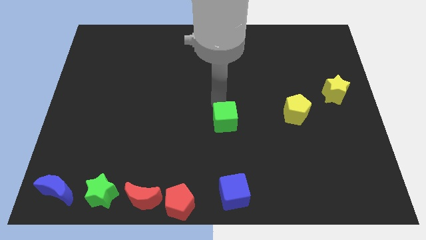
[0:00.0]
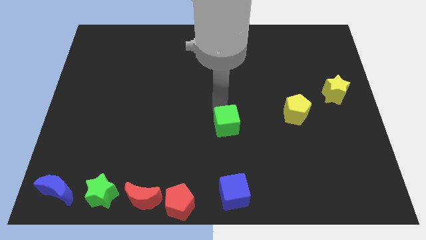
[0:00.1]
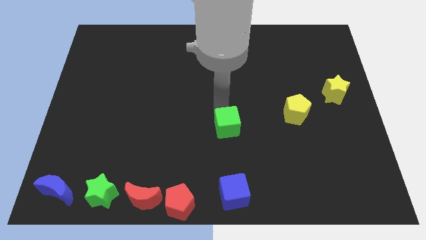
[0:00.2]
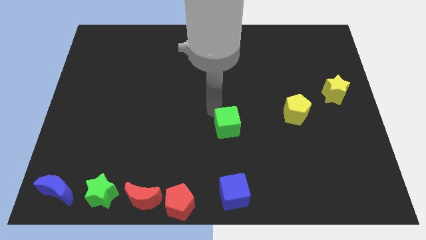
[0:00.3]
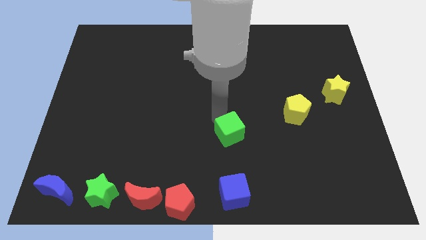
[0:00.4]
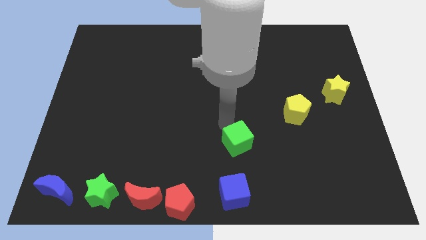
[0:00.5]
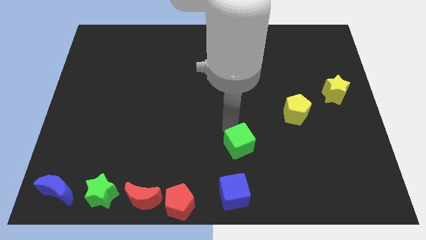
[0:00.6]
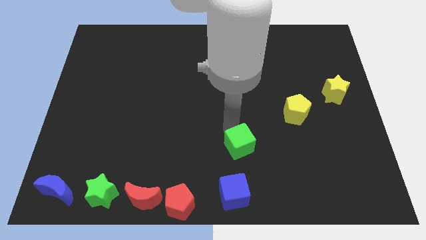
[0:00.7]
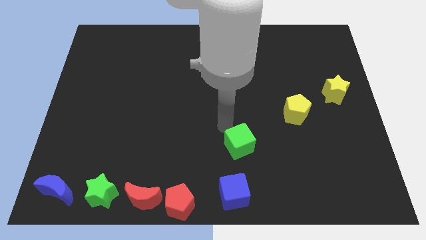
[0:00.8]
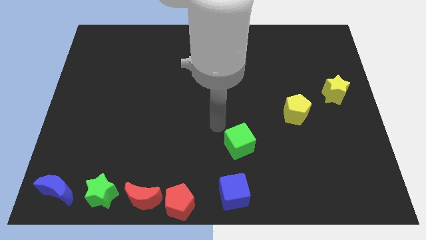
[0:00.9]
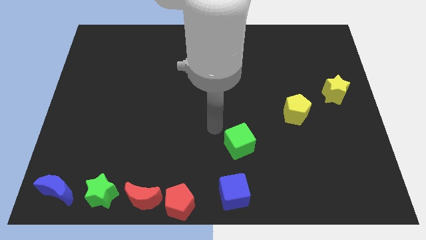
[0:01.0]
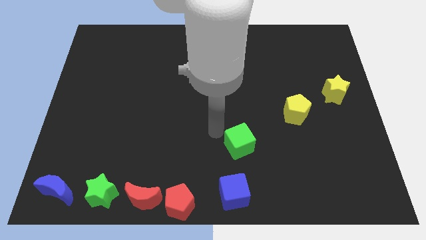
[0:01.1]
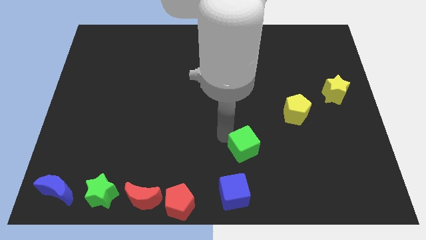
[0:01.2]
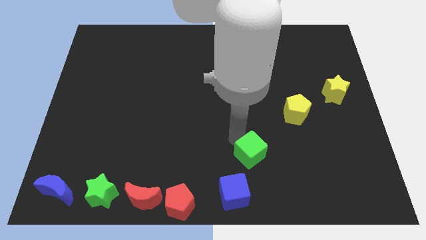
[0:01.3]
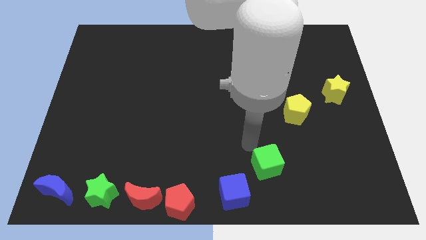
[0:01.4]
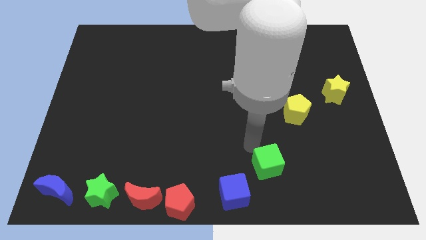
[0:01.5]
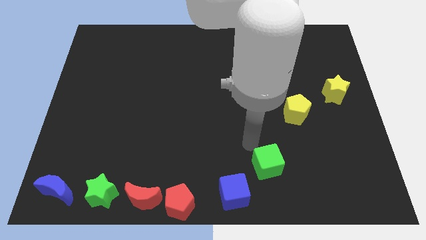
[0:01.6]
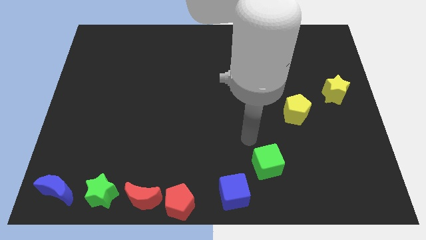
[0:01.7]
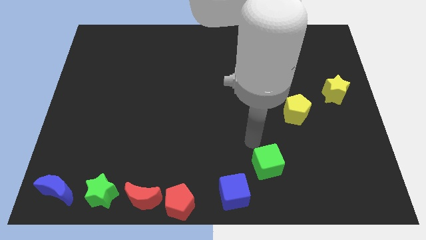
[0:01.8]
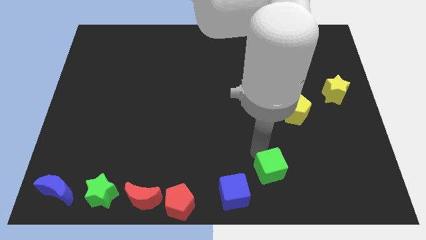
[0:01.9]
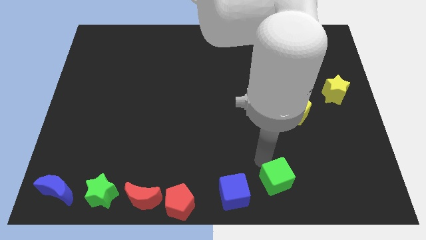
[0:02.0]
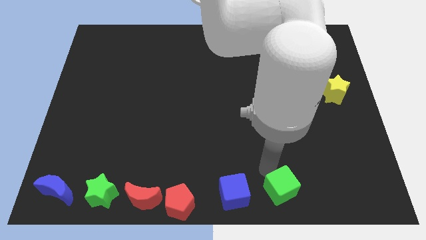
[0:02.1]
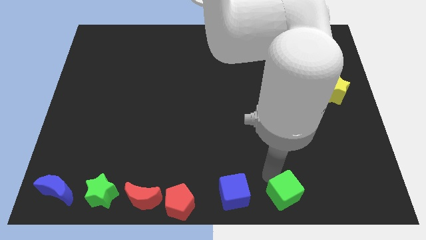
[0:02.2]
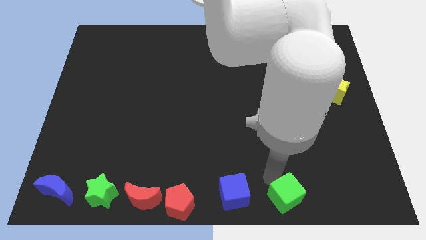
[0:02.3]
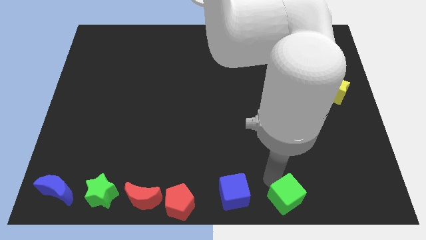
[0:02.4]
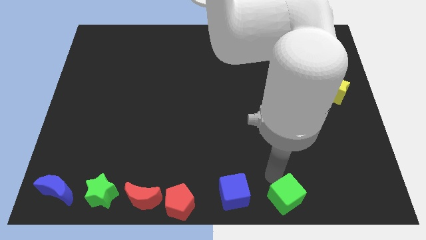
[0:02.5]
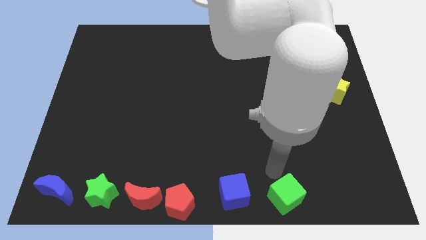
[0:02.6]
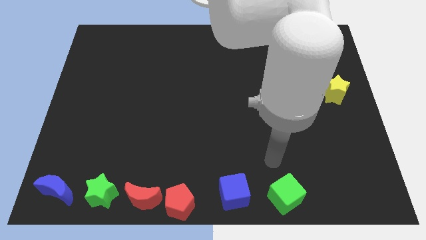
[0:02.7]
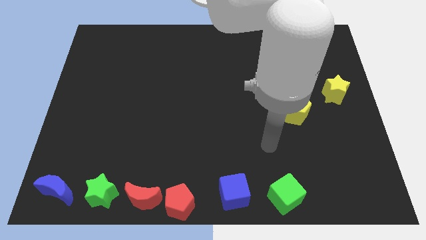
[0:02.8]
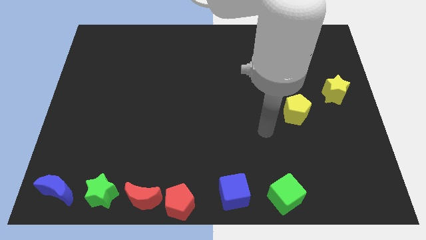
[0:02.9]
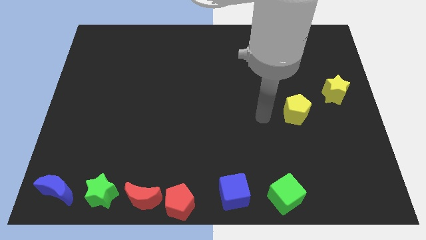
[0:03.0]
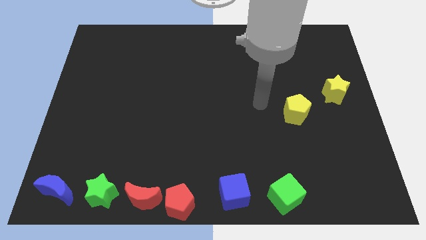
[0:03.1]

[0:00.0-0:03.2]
place the green cube to the right side of the blue cube

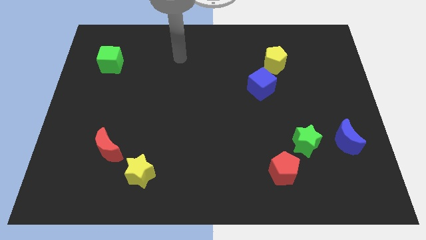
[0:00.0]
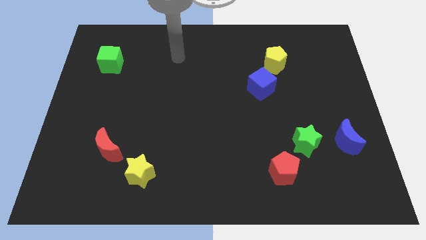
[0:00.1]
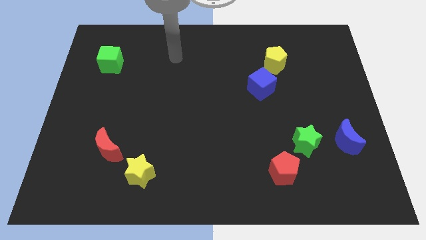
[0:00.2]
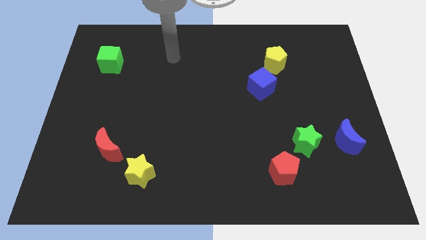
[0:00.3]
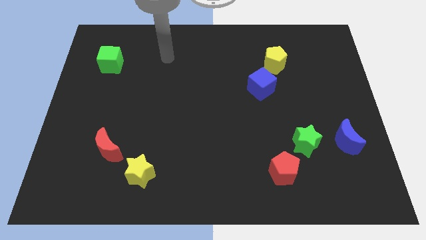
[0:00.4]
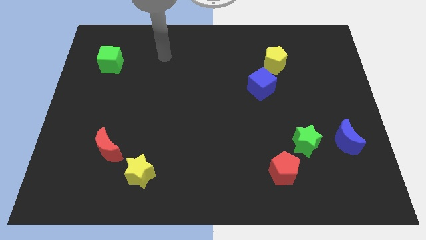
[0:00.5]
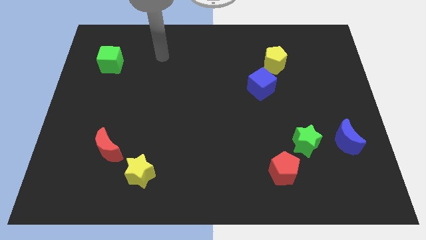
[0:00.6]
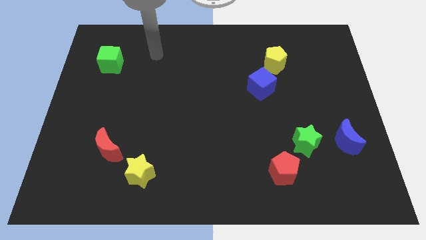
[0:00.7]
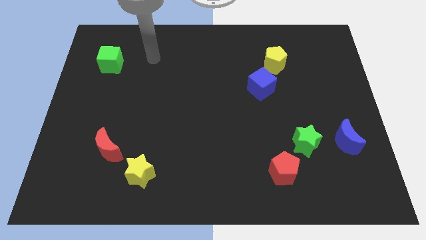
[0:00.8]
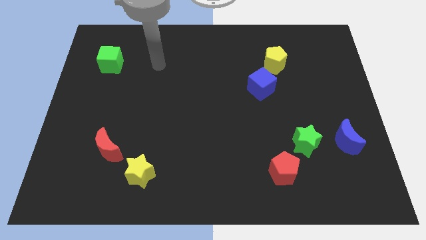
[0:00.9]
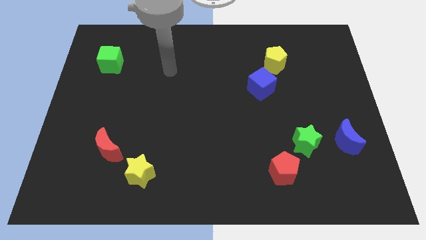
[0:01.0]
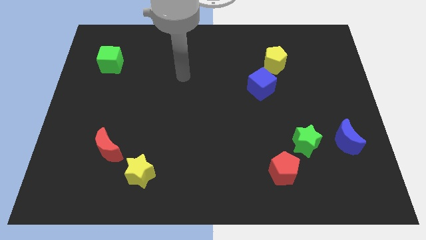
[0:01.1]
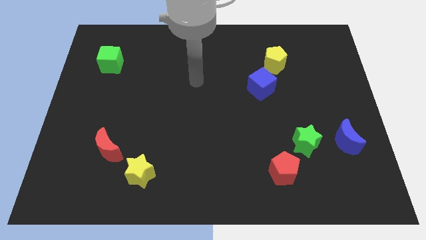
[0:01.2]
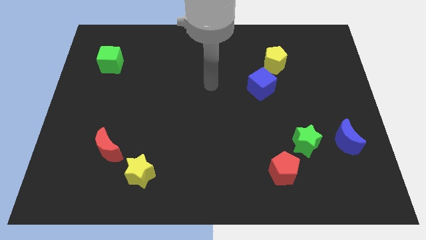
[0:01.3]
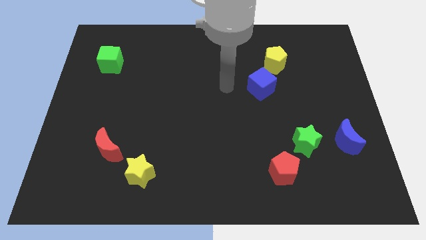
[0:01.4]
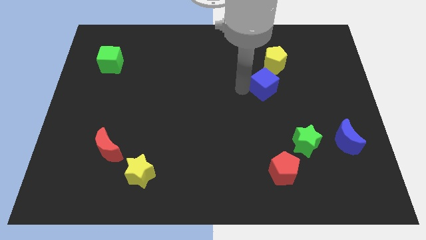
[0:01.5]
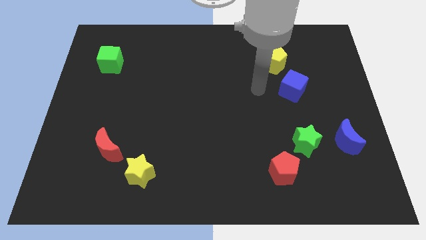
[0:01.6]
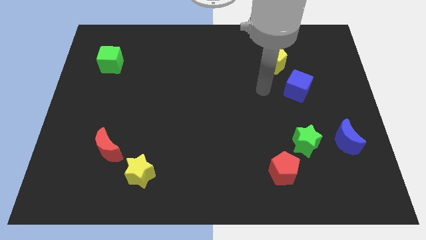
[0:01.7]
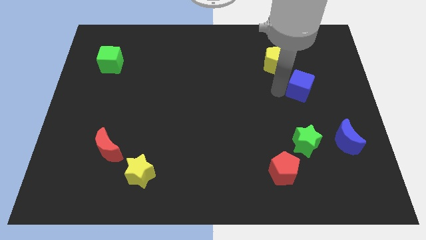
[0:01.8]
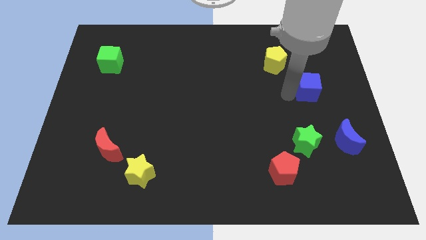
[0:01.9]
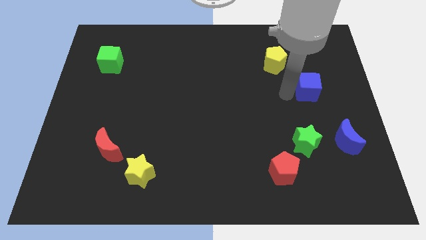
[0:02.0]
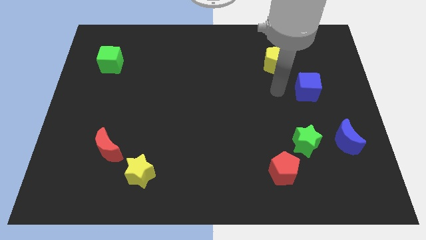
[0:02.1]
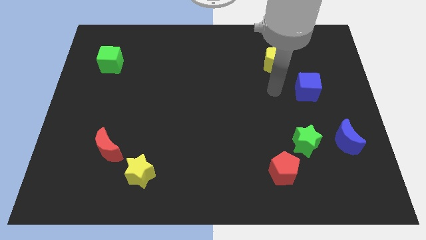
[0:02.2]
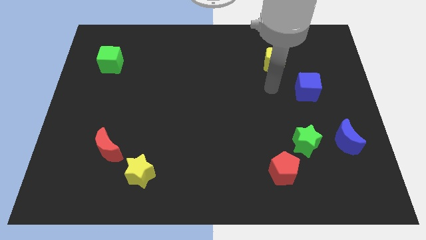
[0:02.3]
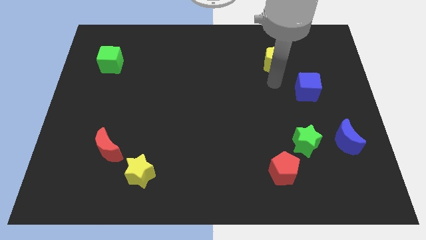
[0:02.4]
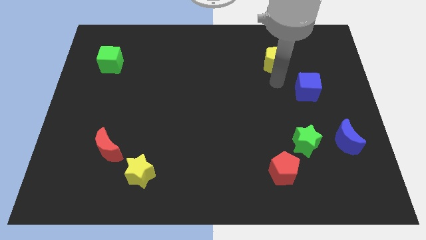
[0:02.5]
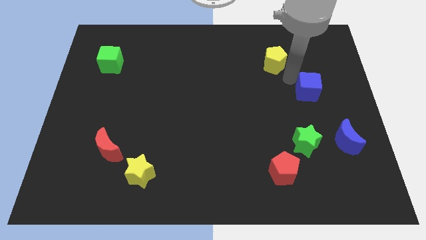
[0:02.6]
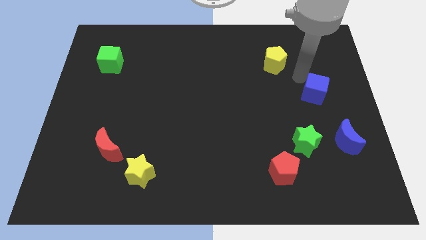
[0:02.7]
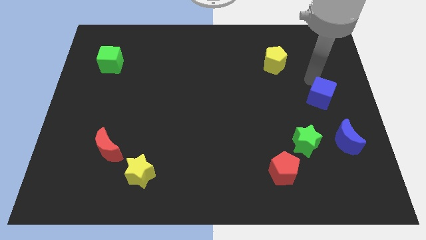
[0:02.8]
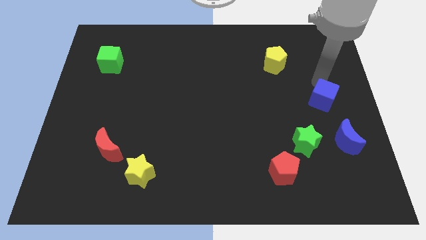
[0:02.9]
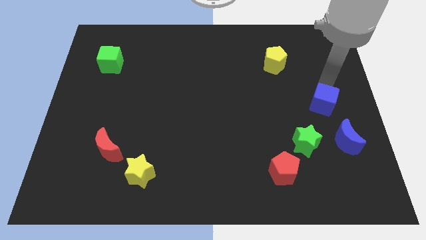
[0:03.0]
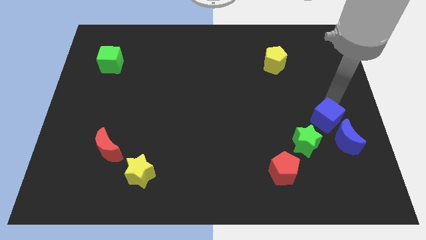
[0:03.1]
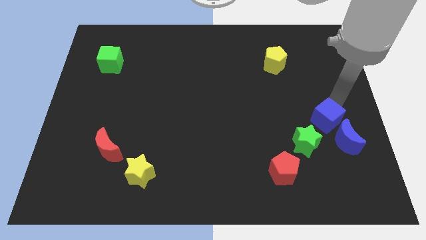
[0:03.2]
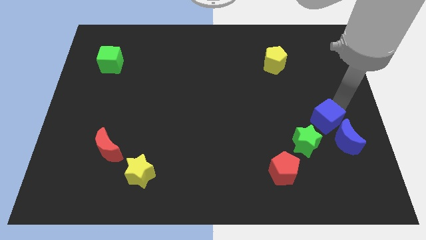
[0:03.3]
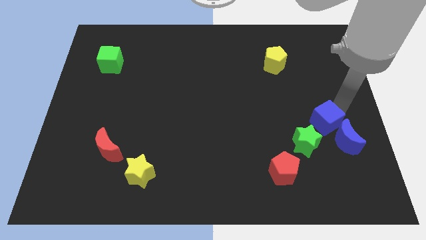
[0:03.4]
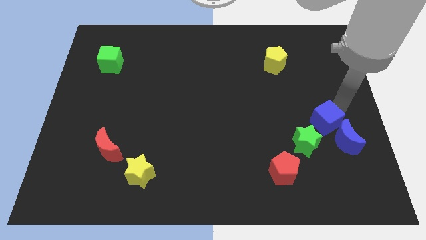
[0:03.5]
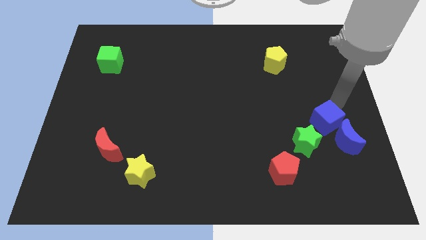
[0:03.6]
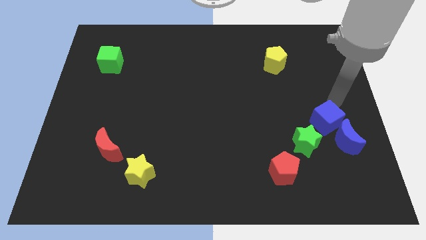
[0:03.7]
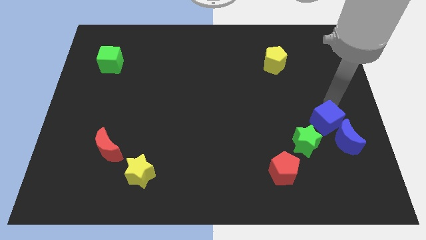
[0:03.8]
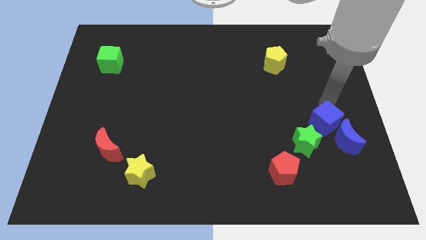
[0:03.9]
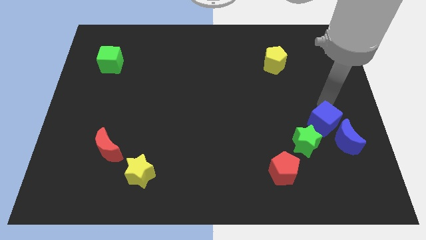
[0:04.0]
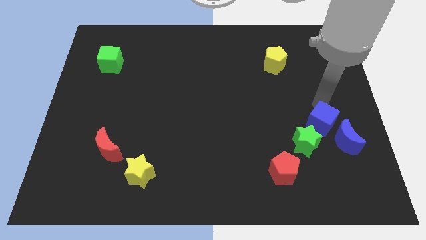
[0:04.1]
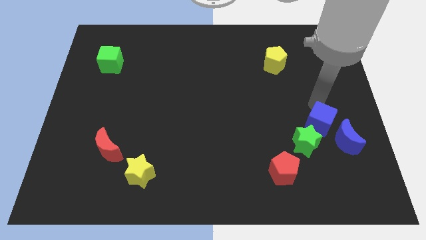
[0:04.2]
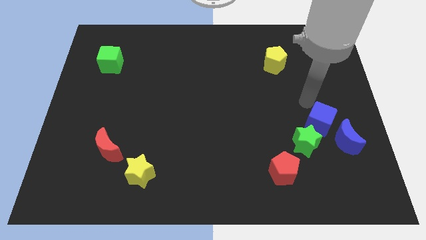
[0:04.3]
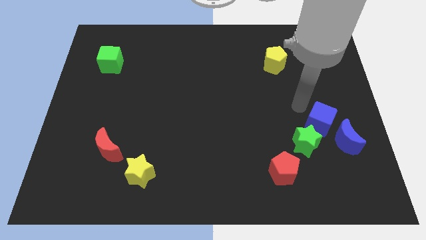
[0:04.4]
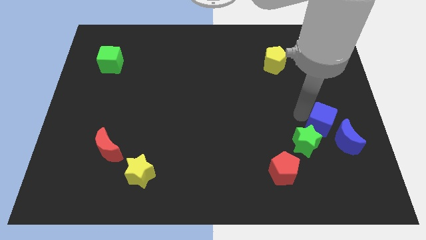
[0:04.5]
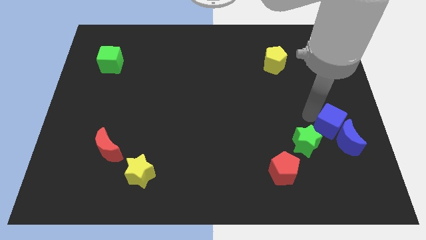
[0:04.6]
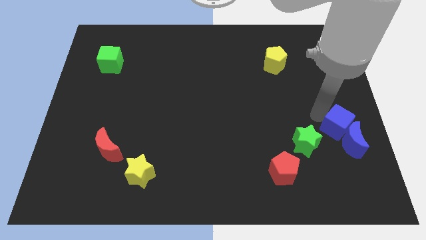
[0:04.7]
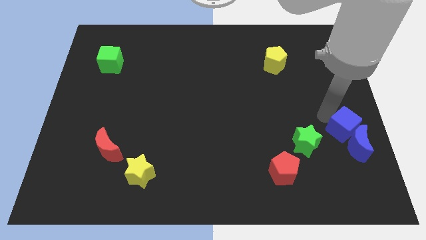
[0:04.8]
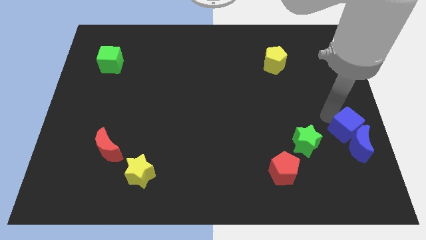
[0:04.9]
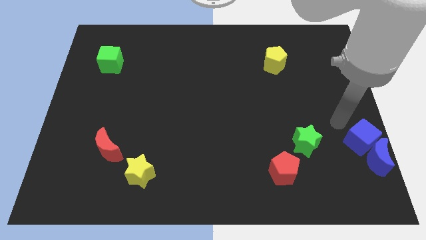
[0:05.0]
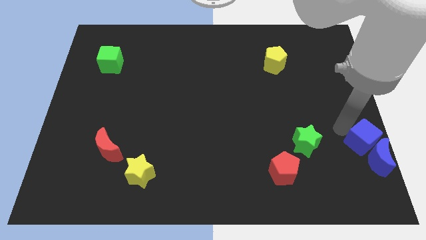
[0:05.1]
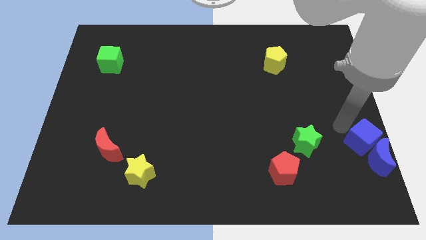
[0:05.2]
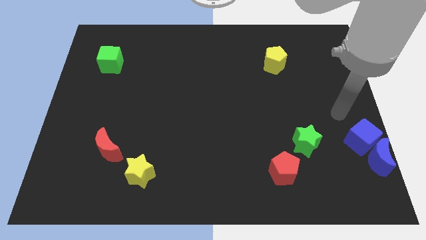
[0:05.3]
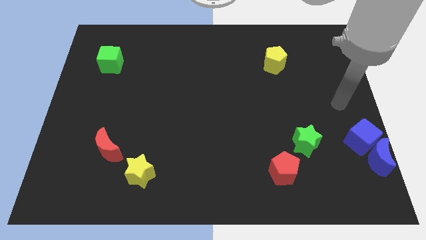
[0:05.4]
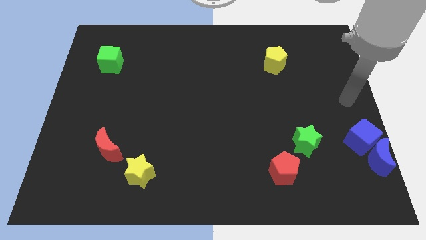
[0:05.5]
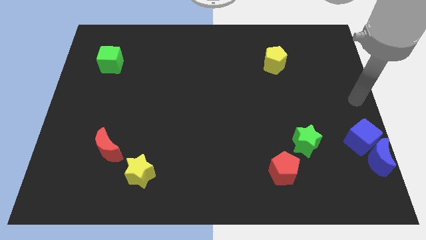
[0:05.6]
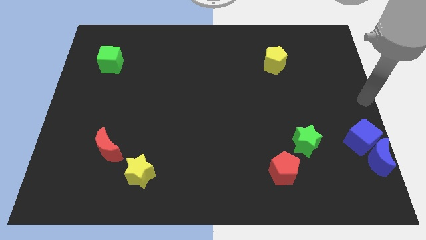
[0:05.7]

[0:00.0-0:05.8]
push the blue cube and the blue crescent to the bottom right side of the board
